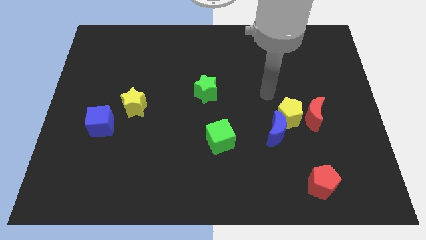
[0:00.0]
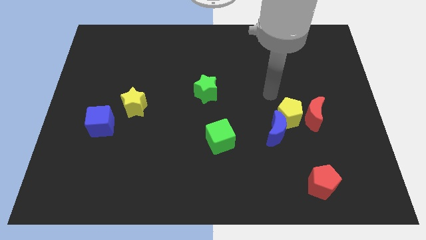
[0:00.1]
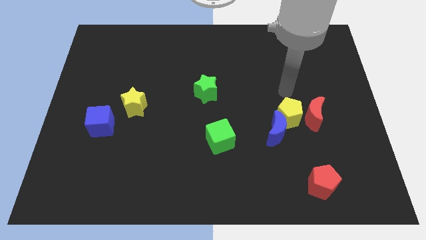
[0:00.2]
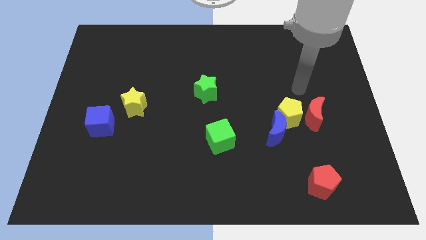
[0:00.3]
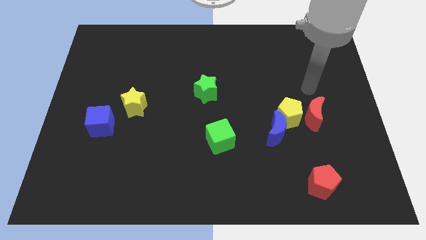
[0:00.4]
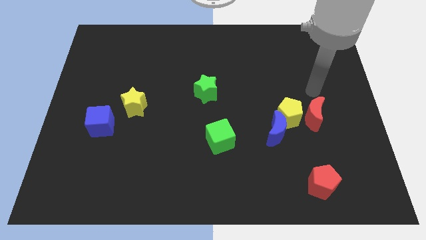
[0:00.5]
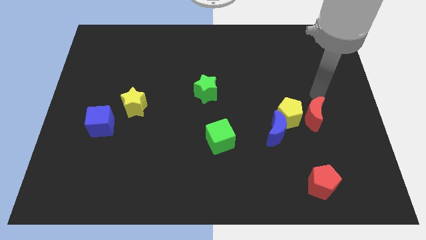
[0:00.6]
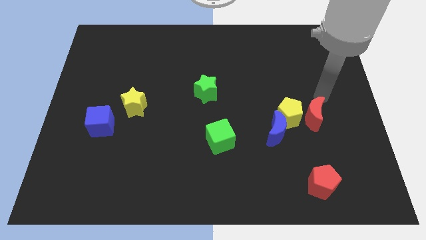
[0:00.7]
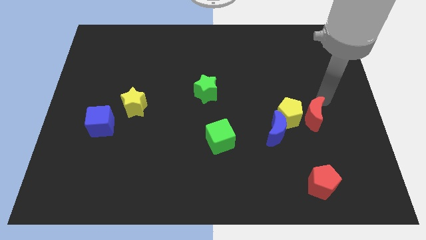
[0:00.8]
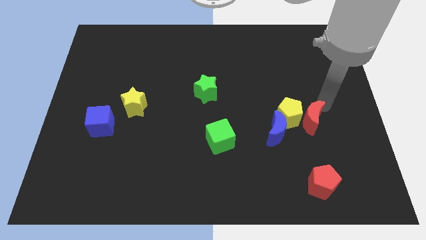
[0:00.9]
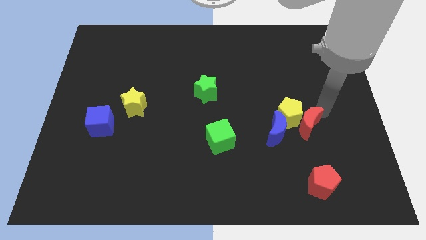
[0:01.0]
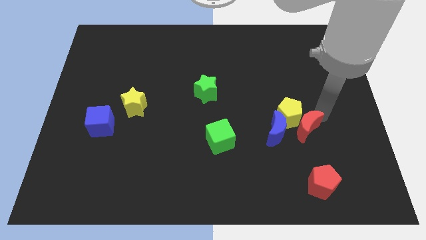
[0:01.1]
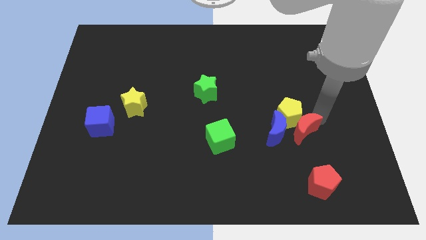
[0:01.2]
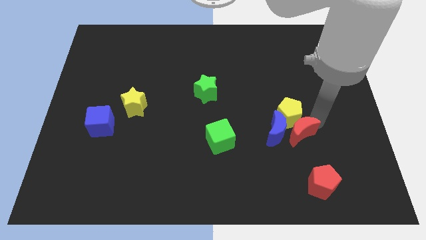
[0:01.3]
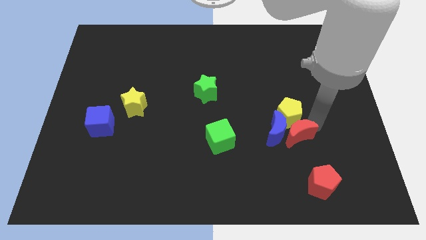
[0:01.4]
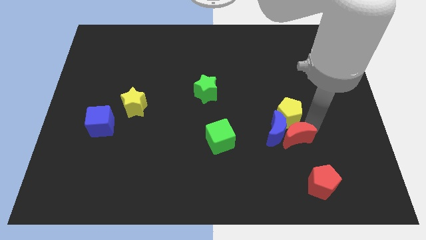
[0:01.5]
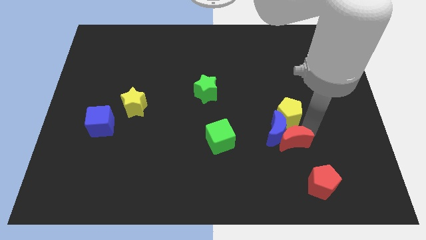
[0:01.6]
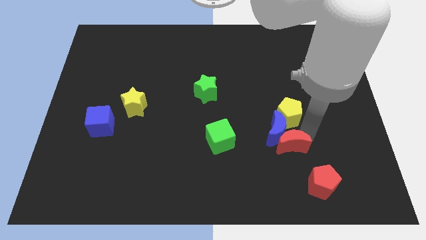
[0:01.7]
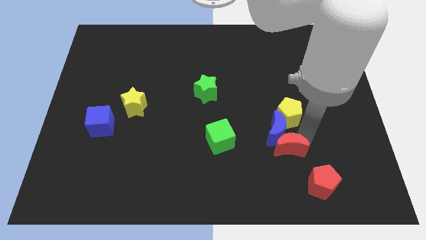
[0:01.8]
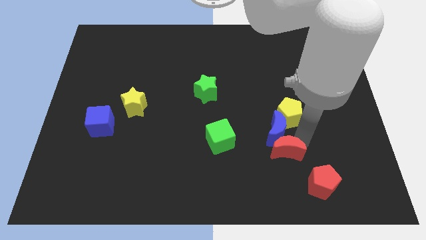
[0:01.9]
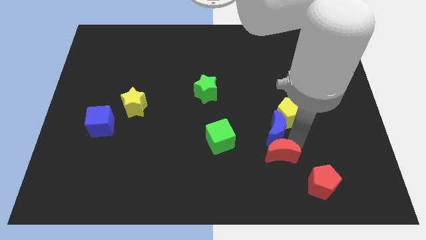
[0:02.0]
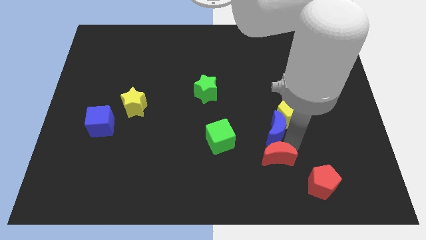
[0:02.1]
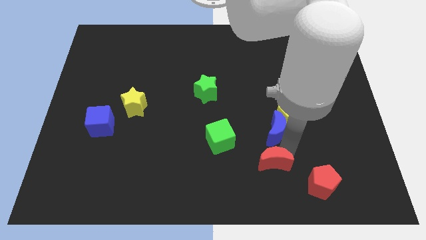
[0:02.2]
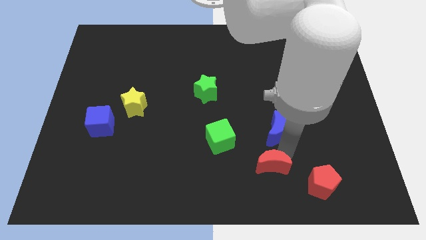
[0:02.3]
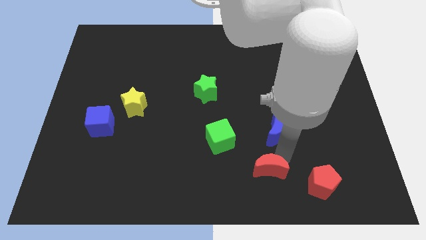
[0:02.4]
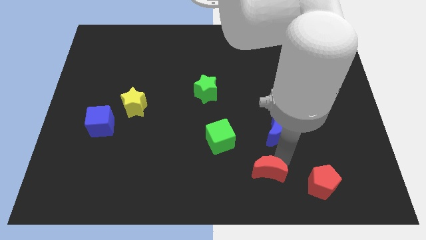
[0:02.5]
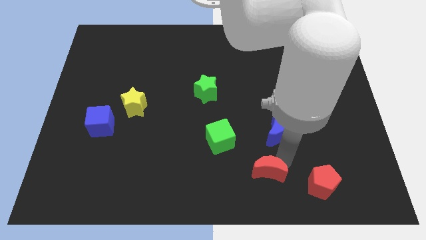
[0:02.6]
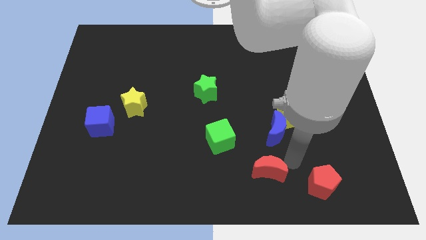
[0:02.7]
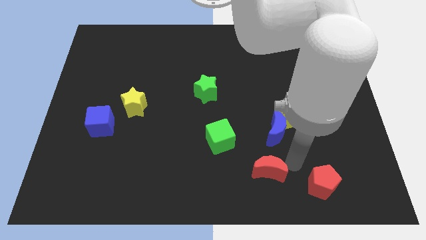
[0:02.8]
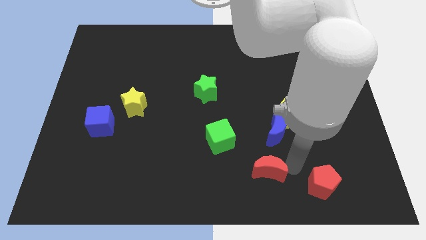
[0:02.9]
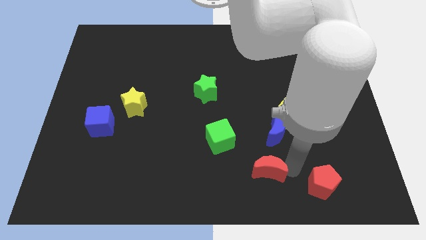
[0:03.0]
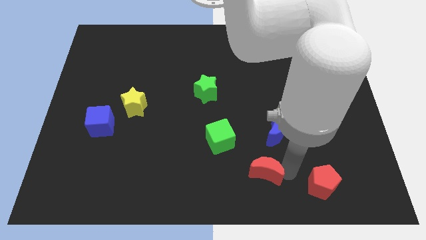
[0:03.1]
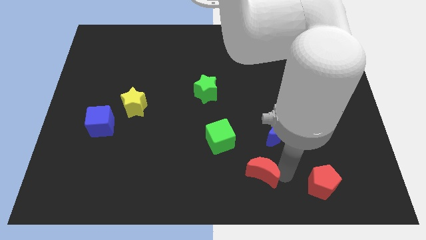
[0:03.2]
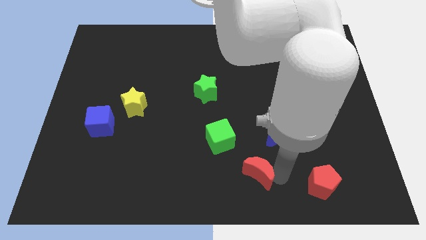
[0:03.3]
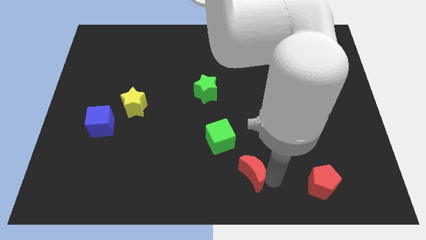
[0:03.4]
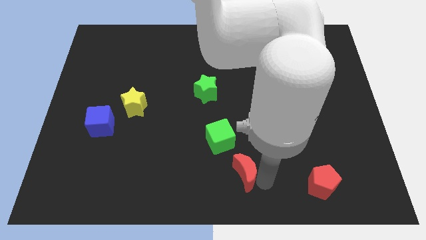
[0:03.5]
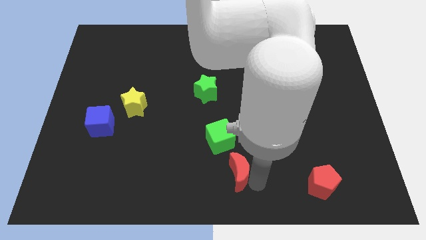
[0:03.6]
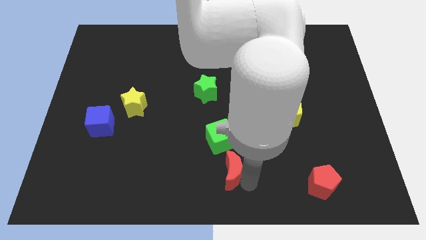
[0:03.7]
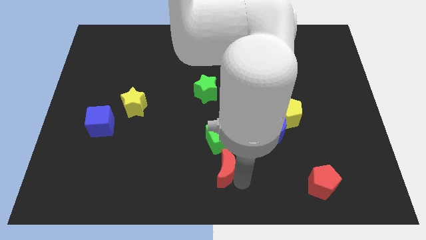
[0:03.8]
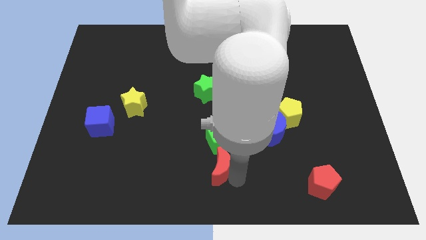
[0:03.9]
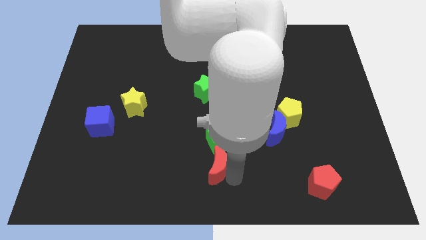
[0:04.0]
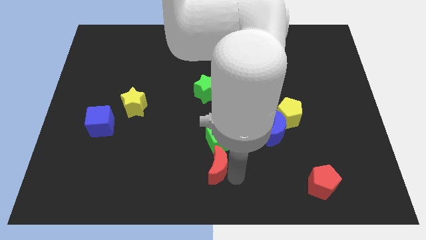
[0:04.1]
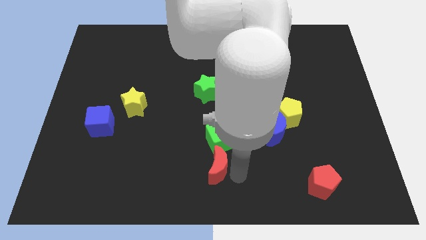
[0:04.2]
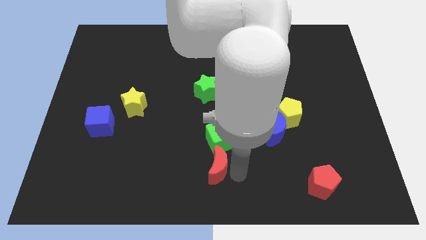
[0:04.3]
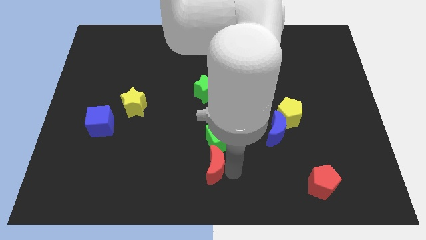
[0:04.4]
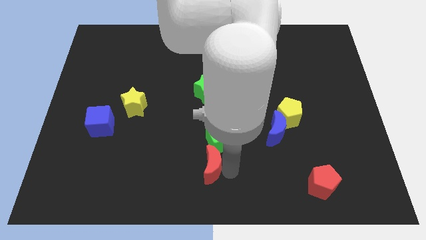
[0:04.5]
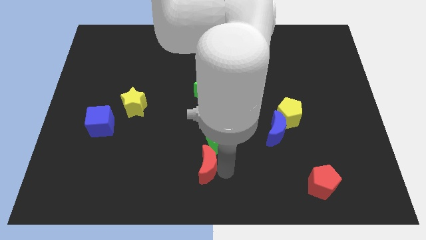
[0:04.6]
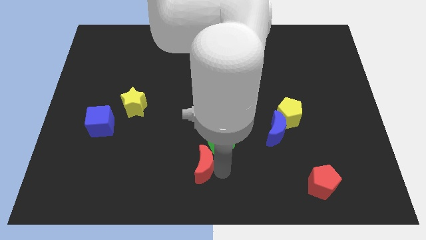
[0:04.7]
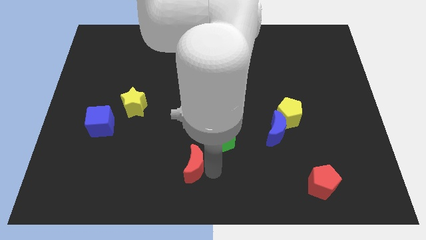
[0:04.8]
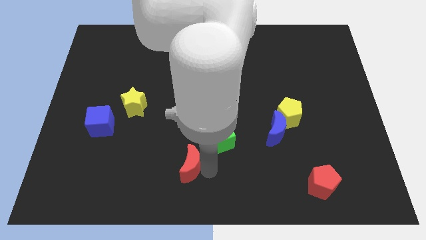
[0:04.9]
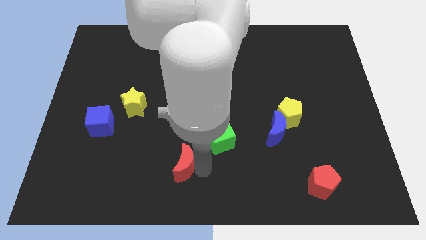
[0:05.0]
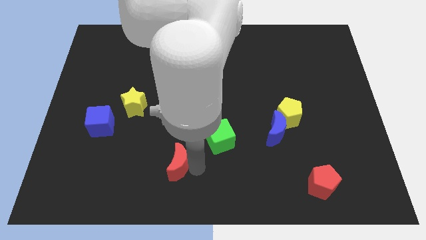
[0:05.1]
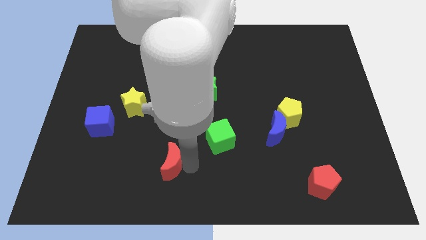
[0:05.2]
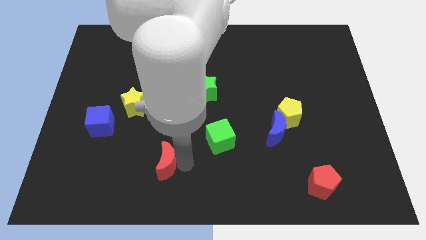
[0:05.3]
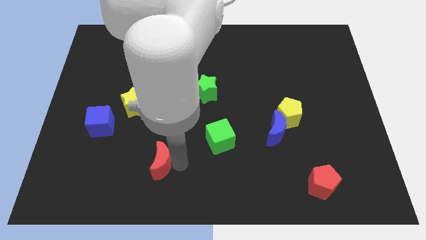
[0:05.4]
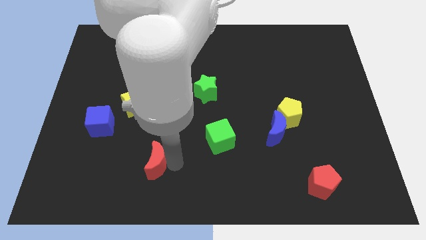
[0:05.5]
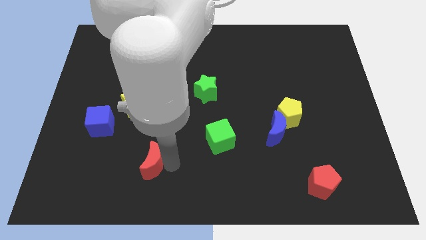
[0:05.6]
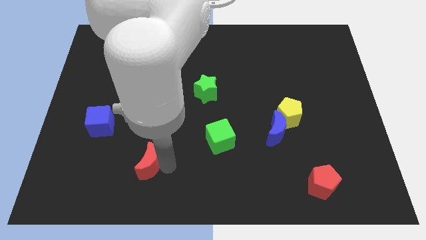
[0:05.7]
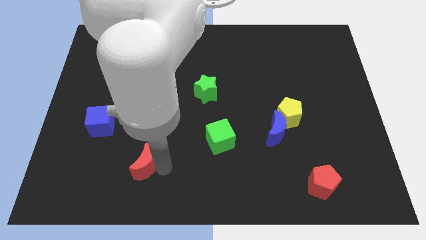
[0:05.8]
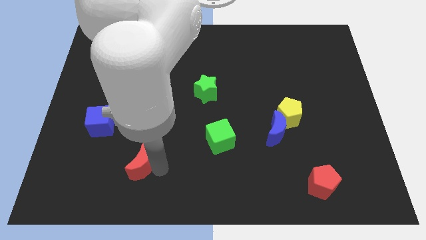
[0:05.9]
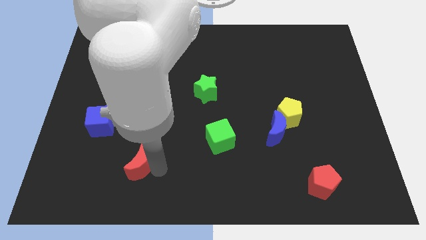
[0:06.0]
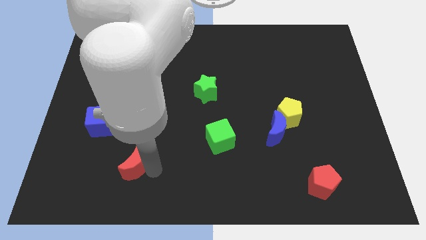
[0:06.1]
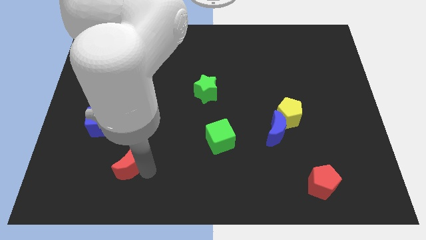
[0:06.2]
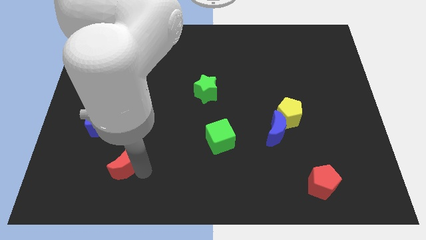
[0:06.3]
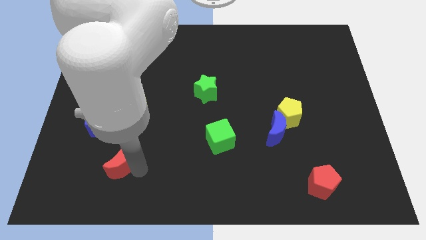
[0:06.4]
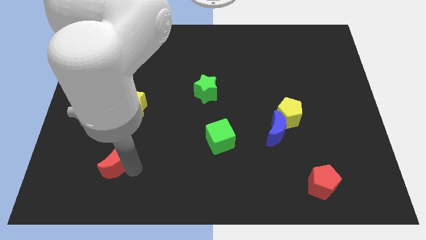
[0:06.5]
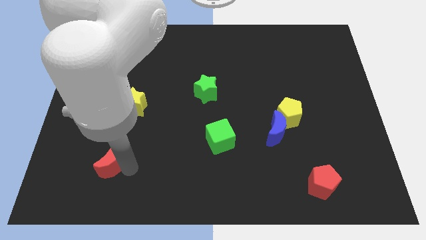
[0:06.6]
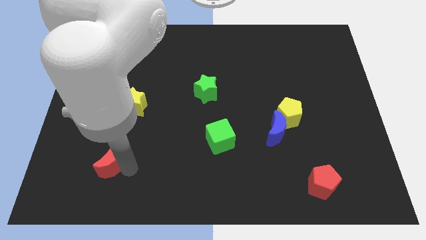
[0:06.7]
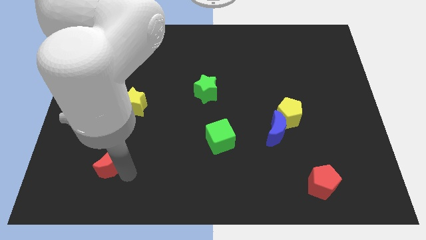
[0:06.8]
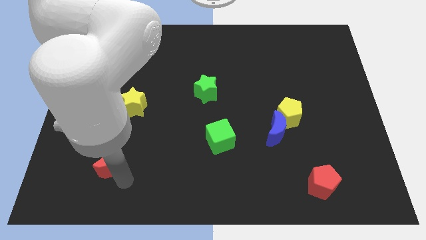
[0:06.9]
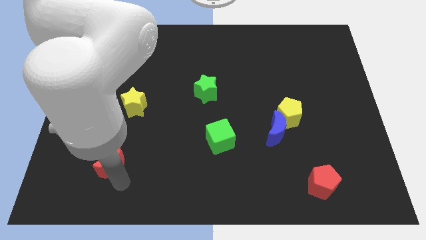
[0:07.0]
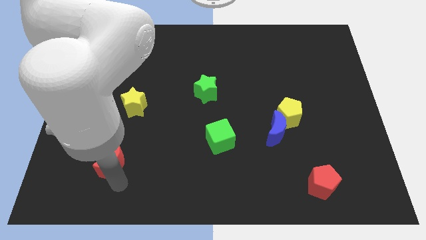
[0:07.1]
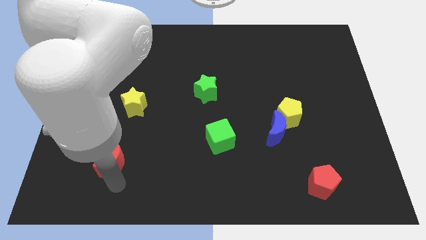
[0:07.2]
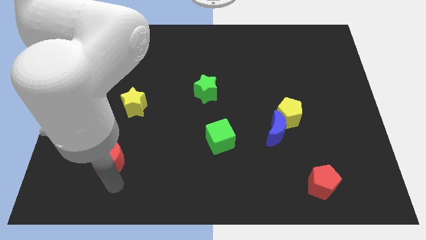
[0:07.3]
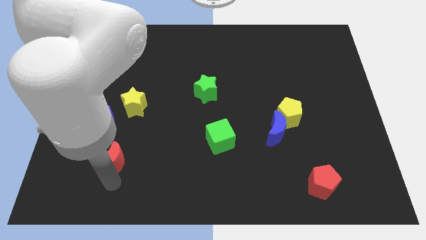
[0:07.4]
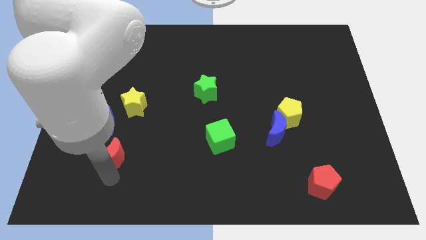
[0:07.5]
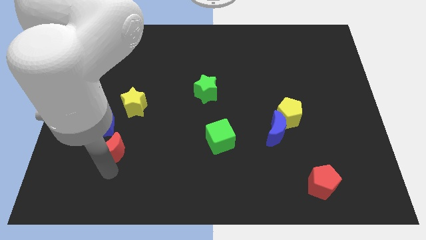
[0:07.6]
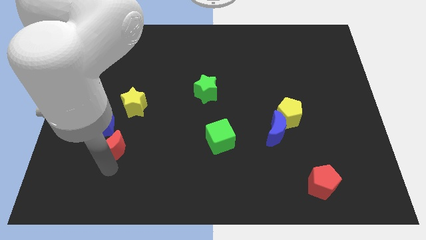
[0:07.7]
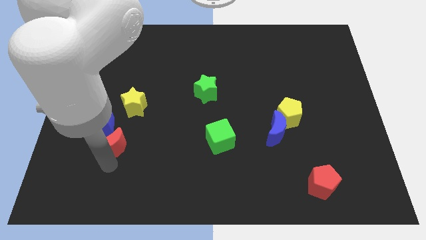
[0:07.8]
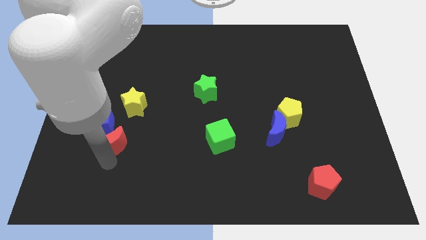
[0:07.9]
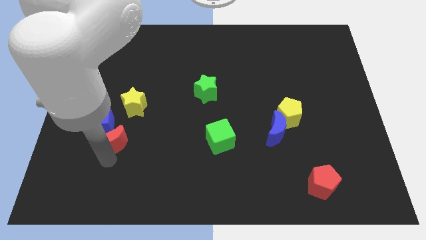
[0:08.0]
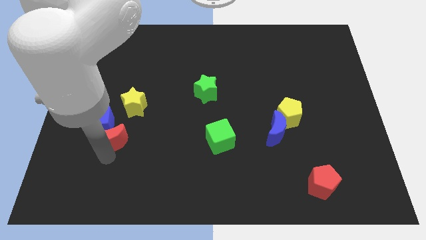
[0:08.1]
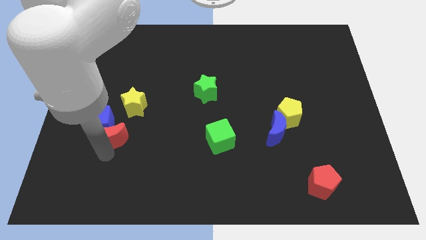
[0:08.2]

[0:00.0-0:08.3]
move the red moon close to the blue cube

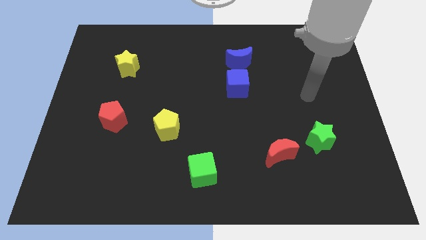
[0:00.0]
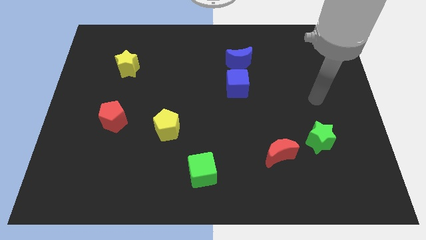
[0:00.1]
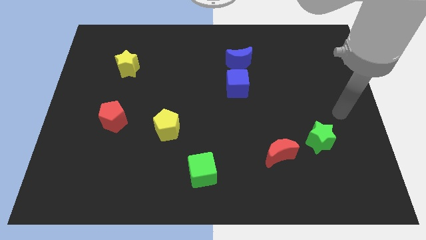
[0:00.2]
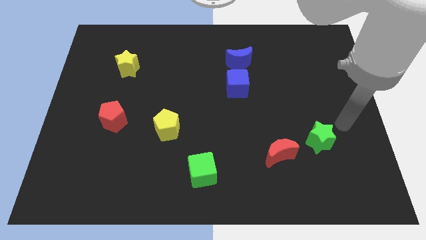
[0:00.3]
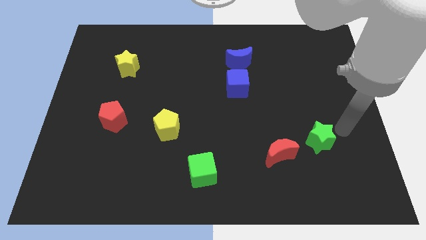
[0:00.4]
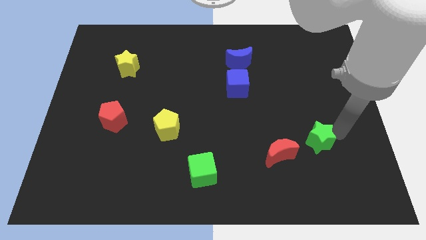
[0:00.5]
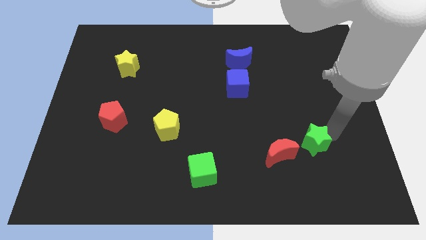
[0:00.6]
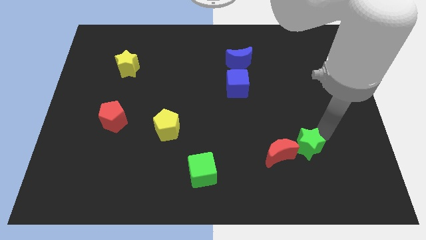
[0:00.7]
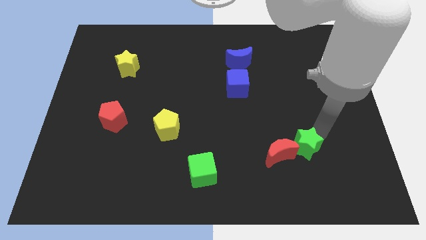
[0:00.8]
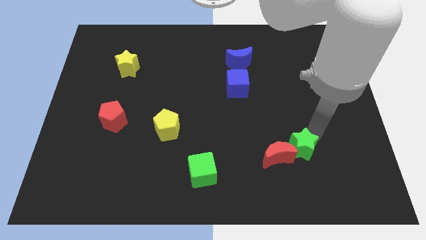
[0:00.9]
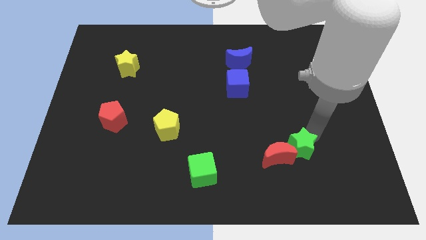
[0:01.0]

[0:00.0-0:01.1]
move the green star next to the red moon
